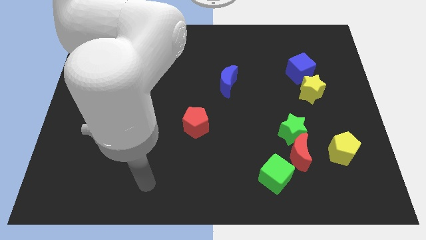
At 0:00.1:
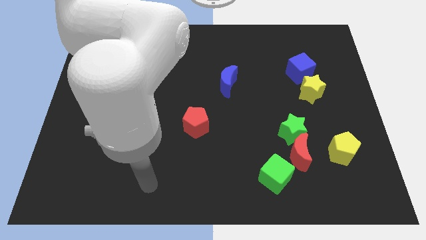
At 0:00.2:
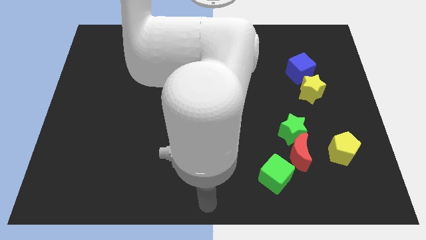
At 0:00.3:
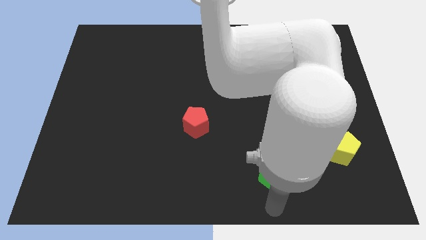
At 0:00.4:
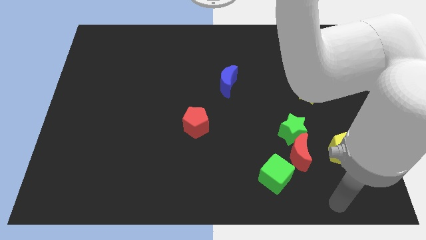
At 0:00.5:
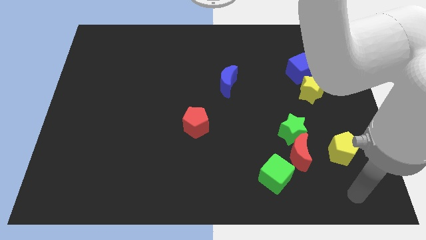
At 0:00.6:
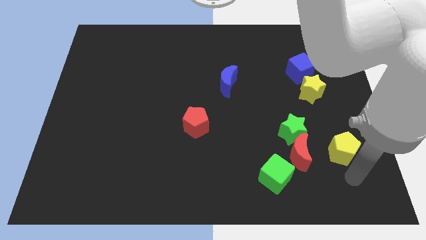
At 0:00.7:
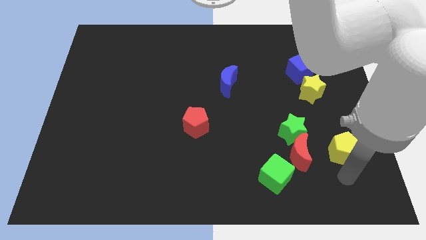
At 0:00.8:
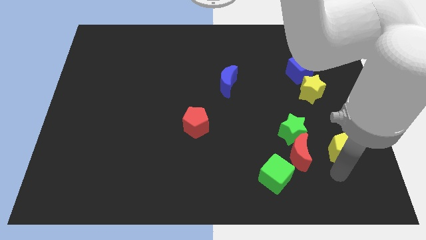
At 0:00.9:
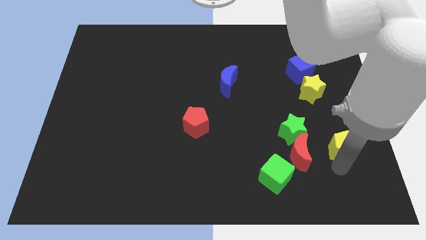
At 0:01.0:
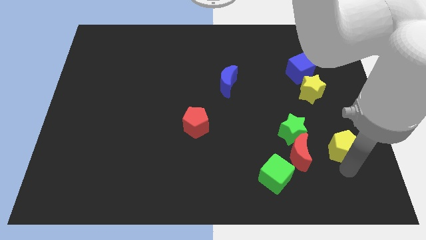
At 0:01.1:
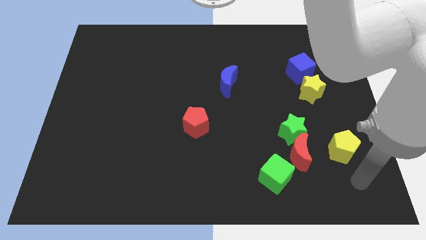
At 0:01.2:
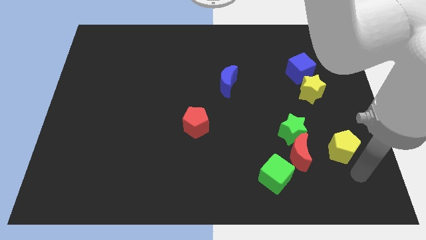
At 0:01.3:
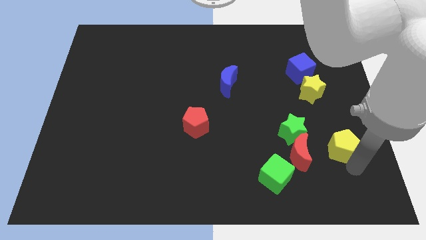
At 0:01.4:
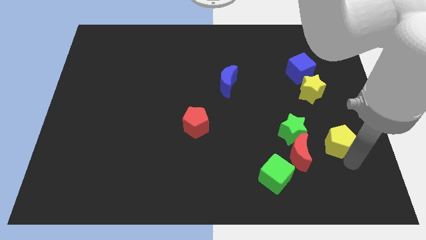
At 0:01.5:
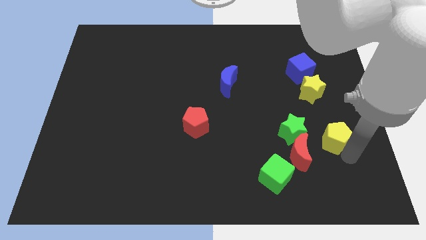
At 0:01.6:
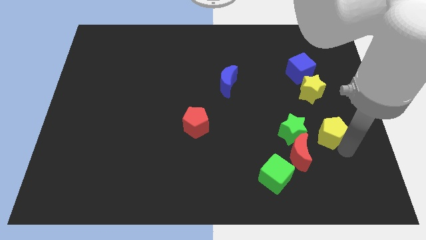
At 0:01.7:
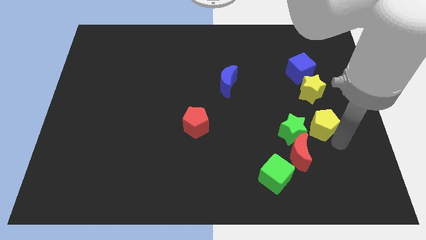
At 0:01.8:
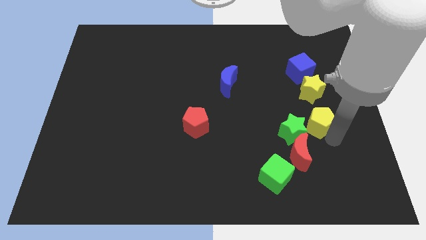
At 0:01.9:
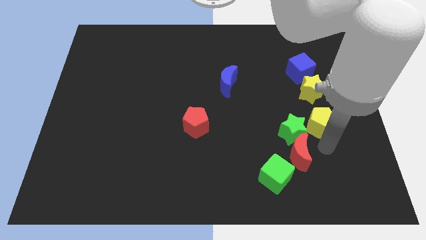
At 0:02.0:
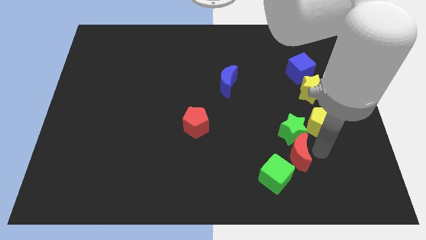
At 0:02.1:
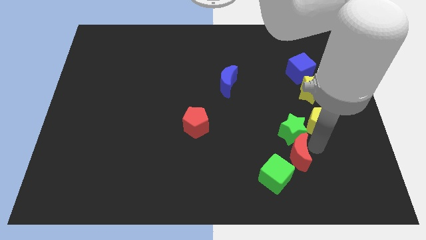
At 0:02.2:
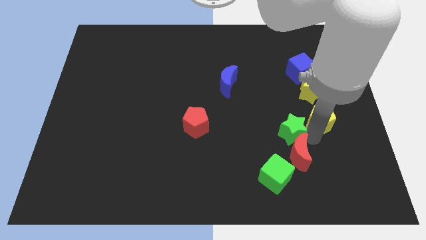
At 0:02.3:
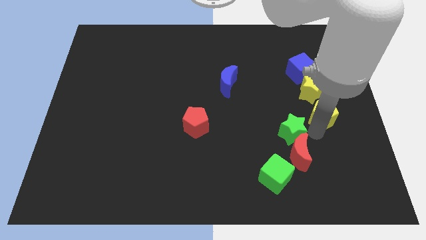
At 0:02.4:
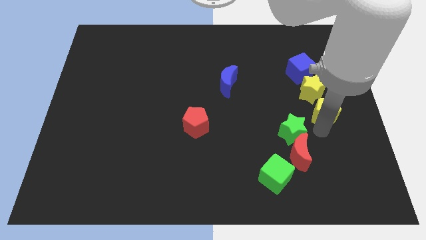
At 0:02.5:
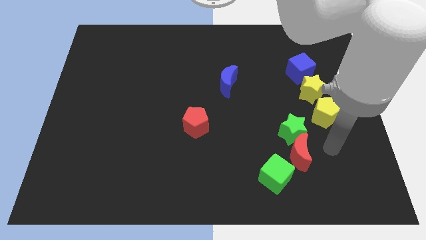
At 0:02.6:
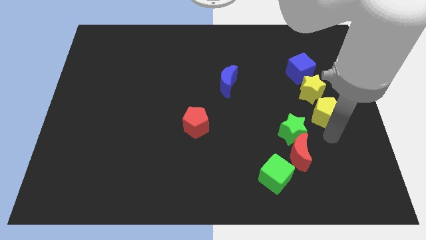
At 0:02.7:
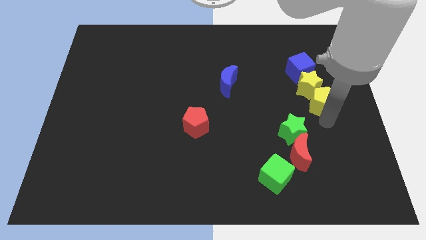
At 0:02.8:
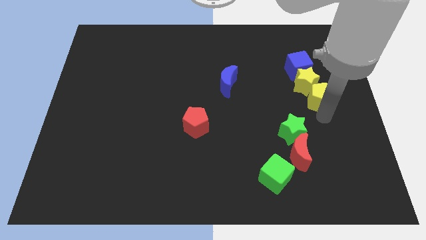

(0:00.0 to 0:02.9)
push the yellow pentagon next to the yellow star

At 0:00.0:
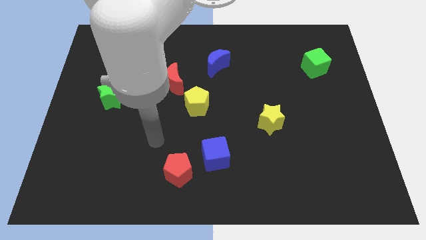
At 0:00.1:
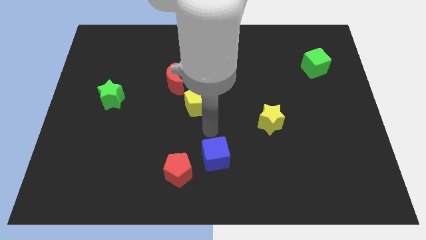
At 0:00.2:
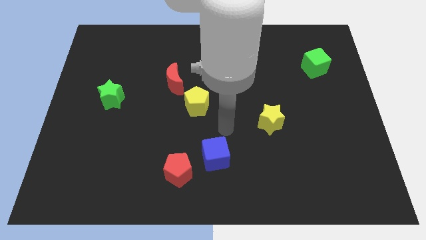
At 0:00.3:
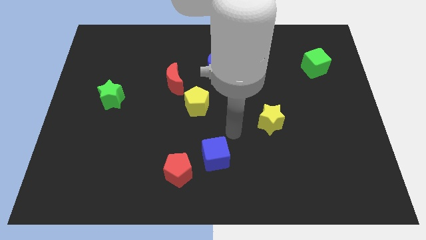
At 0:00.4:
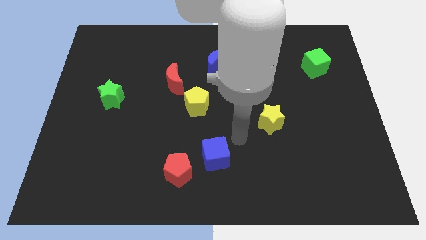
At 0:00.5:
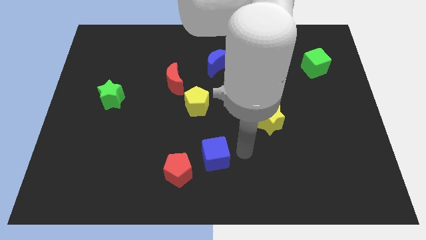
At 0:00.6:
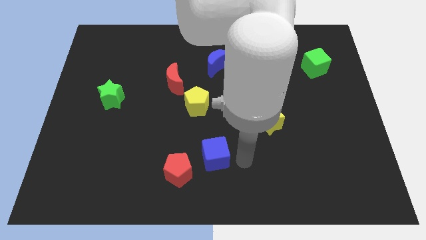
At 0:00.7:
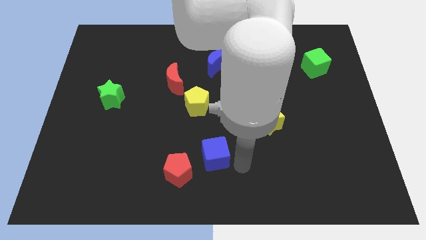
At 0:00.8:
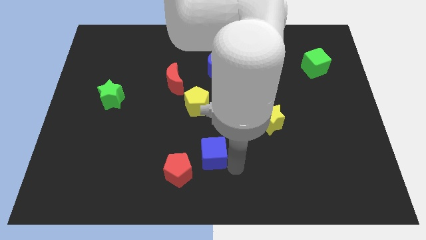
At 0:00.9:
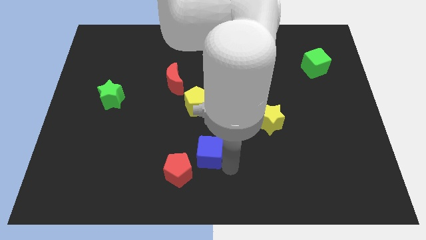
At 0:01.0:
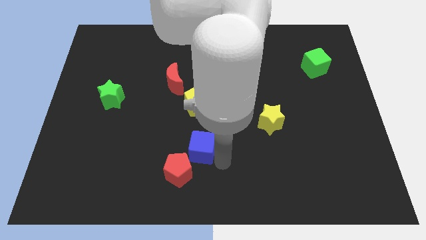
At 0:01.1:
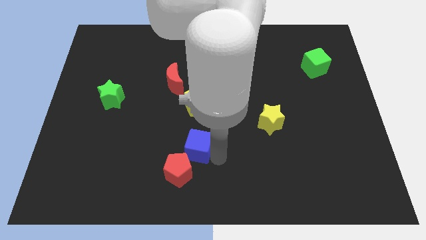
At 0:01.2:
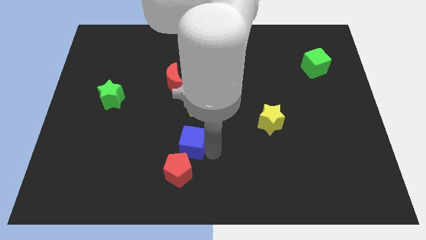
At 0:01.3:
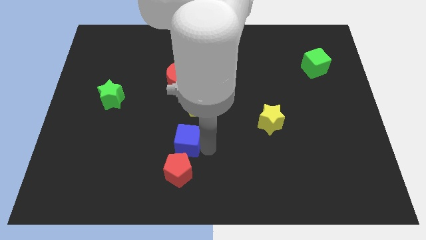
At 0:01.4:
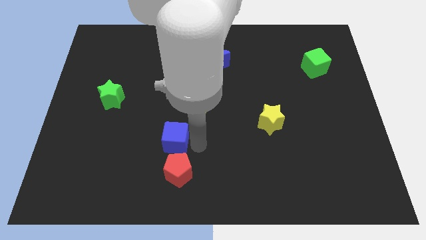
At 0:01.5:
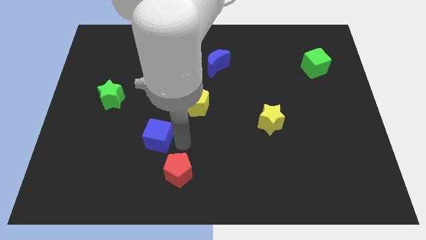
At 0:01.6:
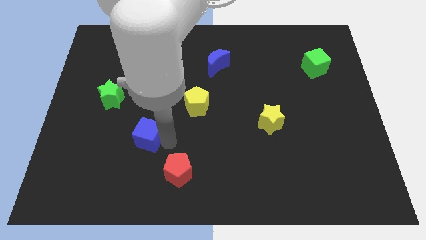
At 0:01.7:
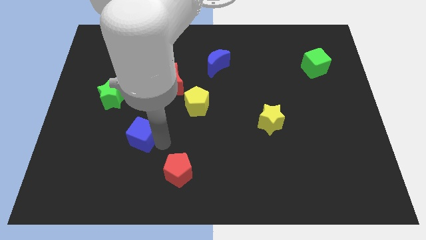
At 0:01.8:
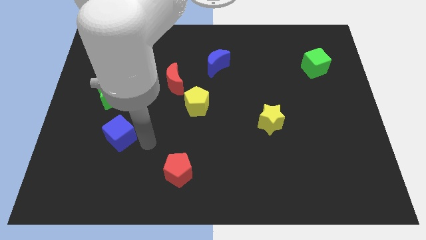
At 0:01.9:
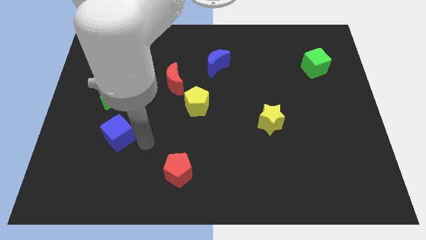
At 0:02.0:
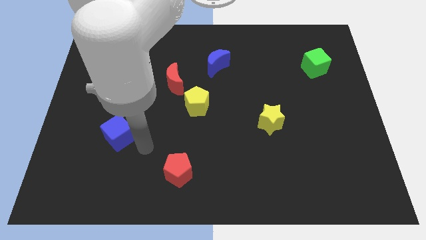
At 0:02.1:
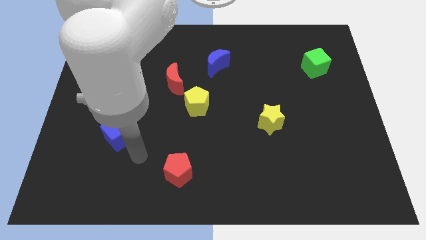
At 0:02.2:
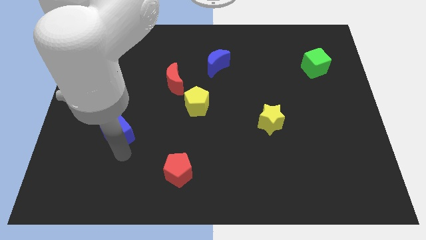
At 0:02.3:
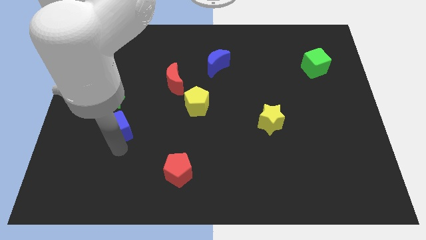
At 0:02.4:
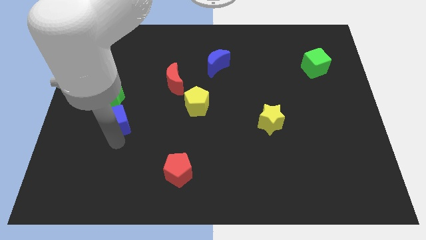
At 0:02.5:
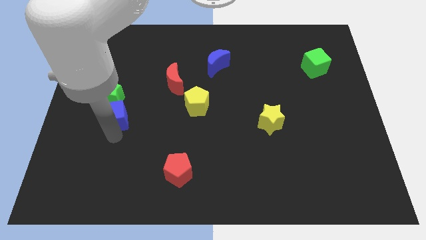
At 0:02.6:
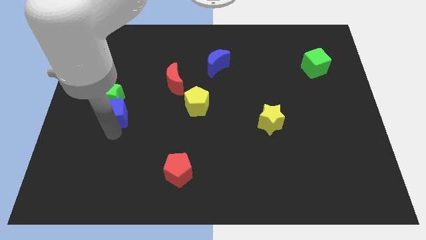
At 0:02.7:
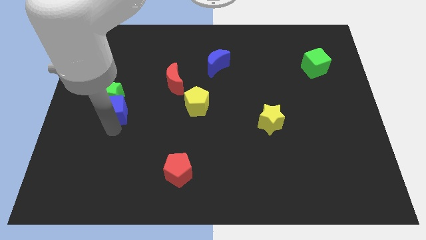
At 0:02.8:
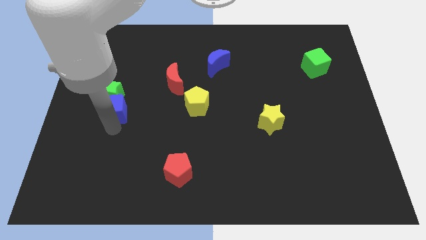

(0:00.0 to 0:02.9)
slide the blue cube to the green star

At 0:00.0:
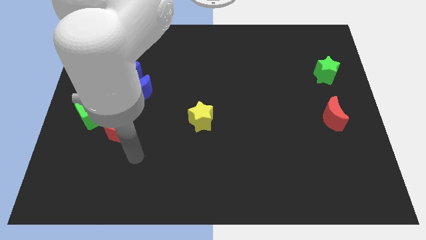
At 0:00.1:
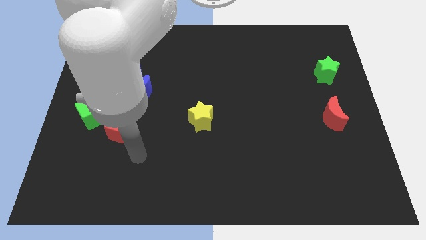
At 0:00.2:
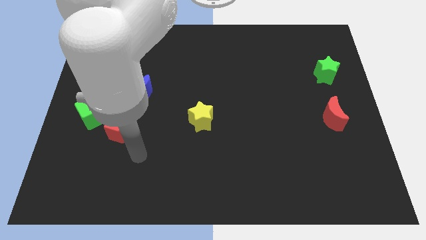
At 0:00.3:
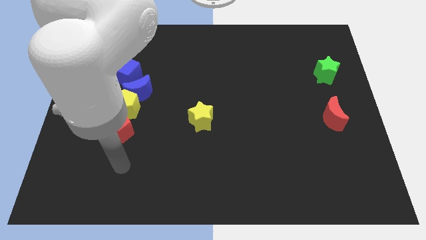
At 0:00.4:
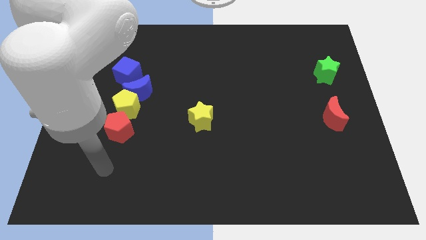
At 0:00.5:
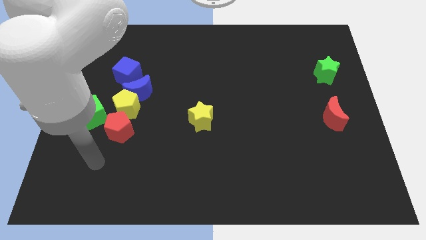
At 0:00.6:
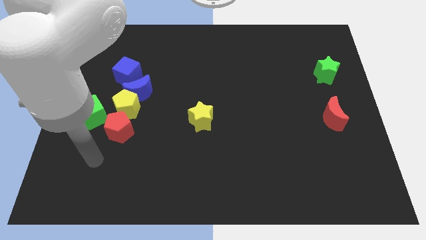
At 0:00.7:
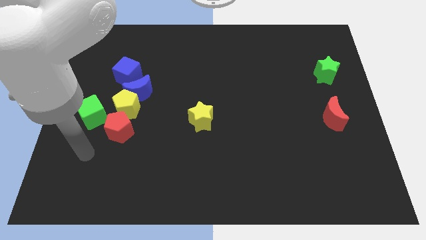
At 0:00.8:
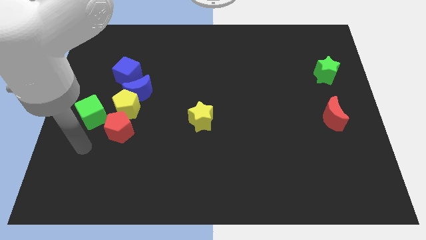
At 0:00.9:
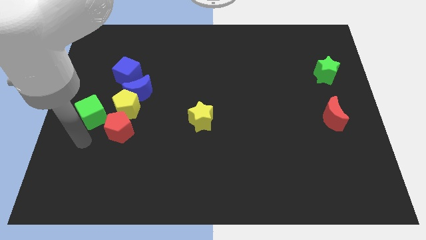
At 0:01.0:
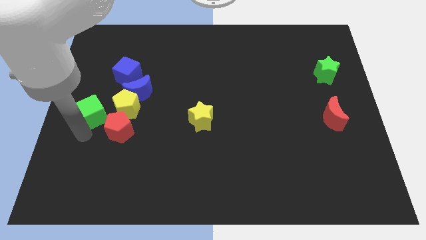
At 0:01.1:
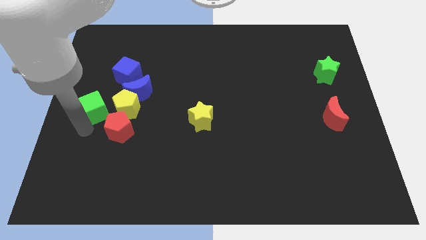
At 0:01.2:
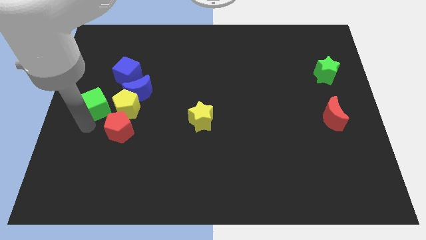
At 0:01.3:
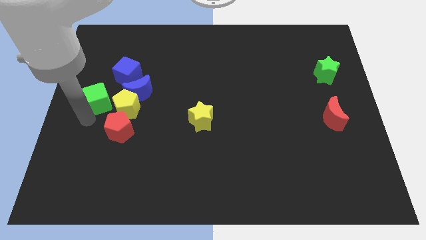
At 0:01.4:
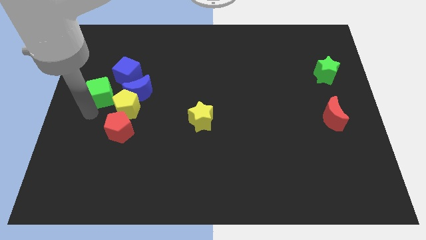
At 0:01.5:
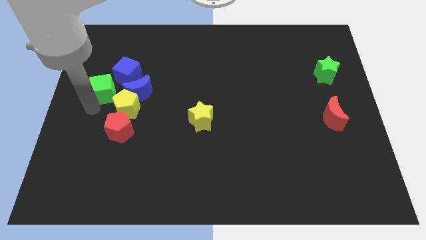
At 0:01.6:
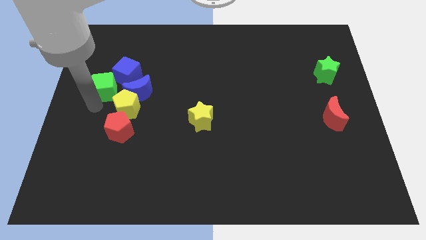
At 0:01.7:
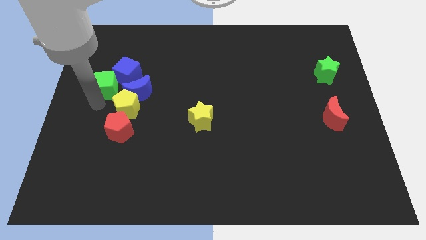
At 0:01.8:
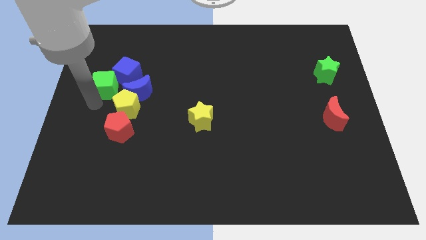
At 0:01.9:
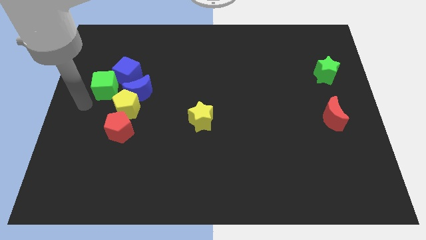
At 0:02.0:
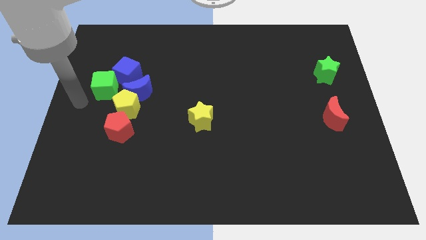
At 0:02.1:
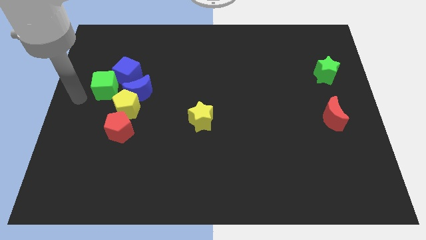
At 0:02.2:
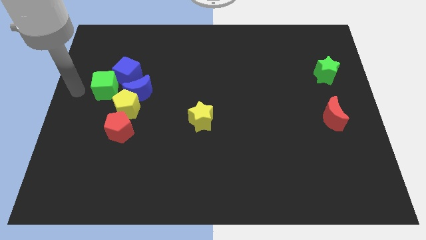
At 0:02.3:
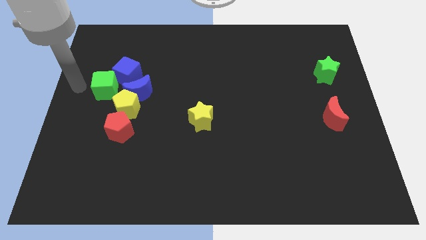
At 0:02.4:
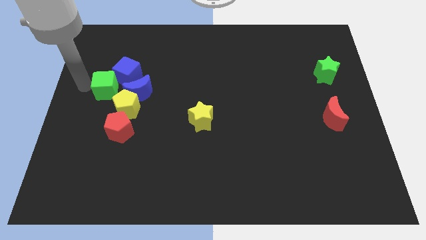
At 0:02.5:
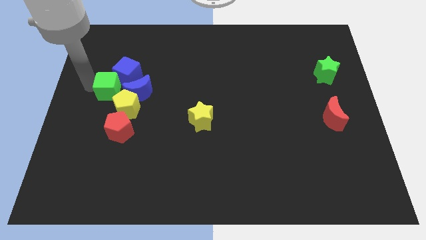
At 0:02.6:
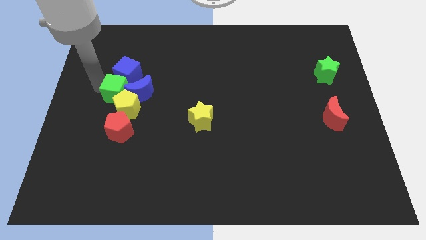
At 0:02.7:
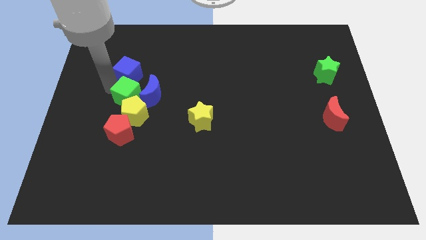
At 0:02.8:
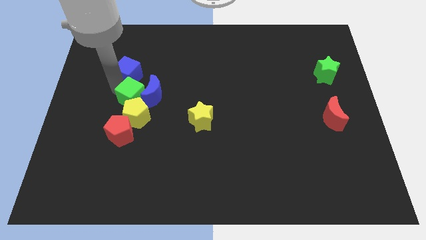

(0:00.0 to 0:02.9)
slide the green cube close to the blue moon
